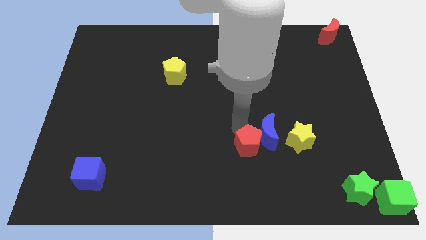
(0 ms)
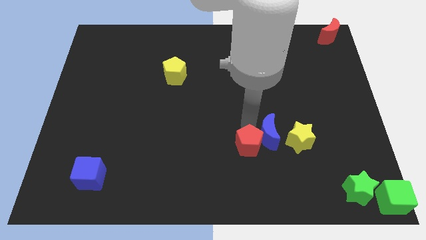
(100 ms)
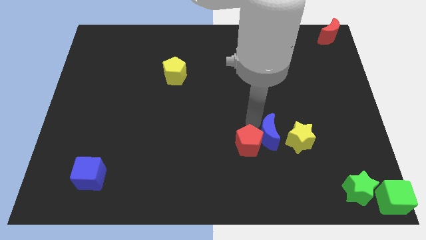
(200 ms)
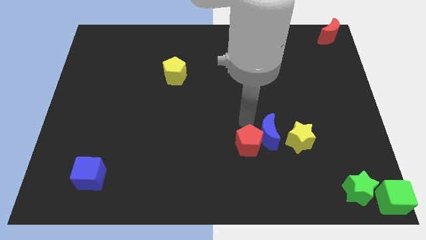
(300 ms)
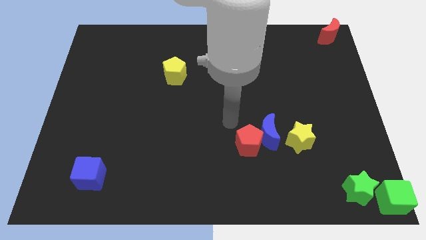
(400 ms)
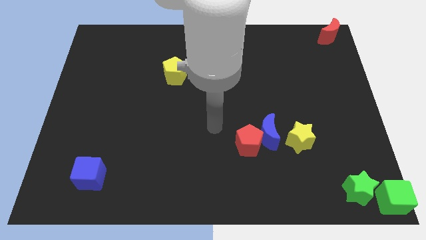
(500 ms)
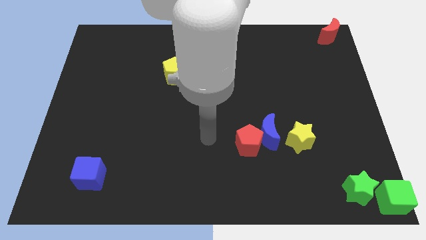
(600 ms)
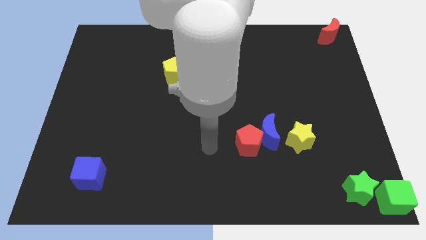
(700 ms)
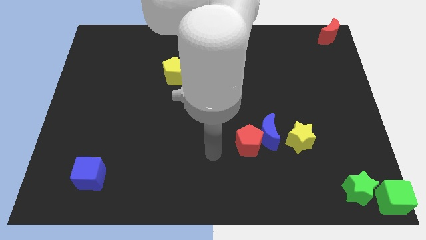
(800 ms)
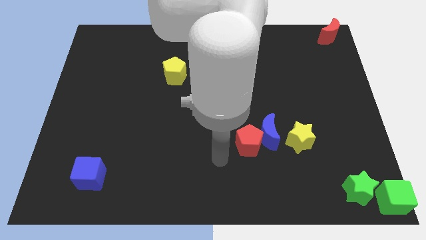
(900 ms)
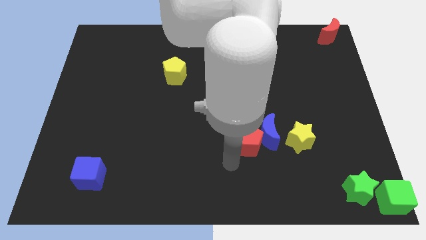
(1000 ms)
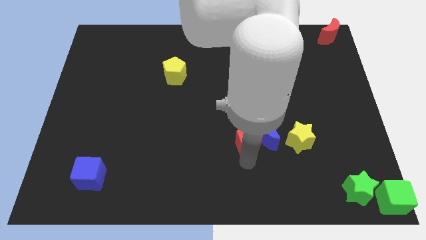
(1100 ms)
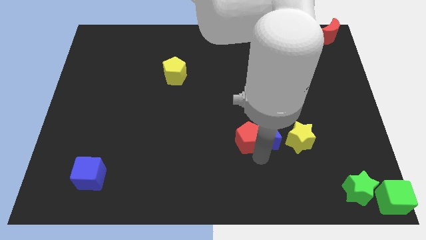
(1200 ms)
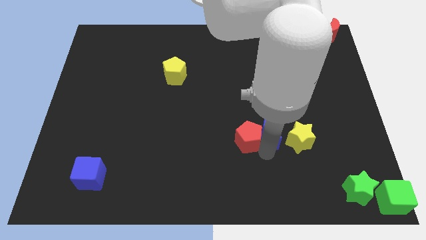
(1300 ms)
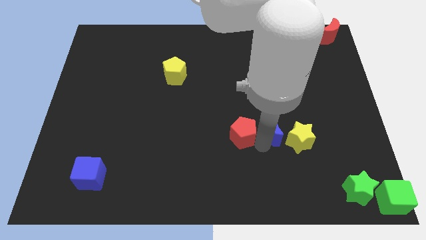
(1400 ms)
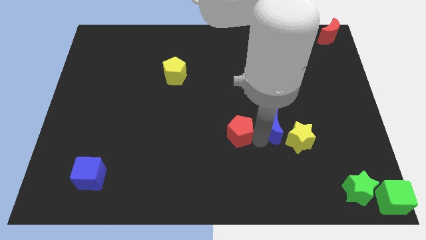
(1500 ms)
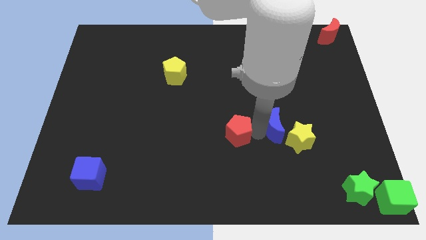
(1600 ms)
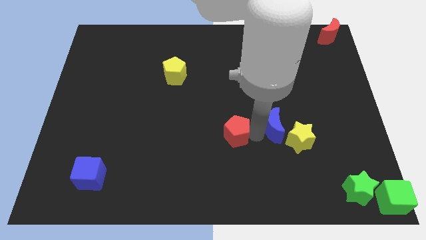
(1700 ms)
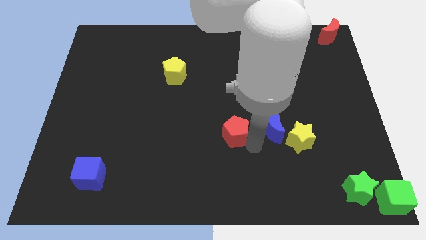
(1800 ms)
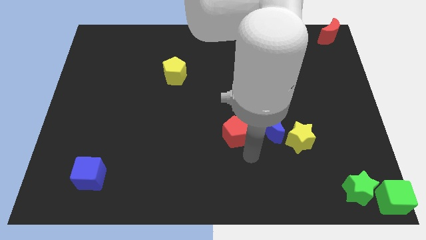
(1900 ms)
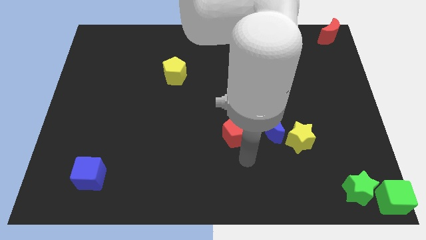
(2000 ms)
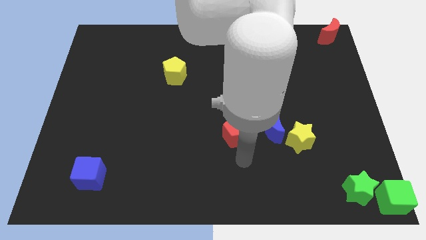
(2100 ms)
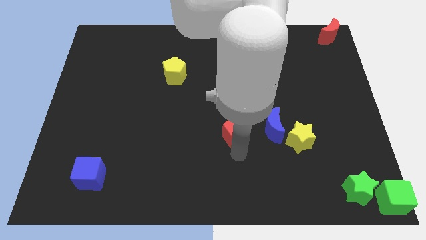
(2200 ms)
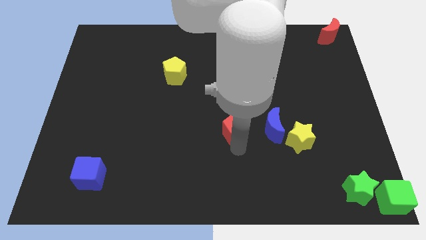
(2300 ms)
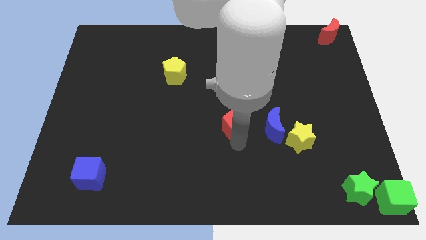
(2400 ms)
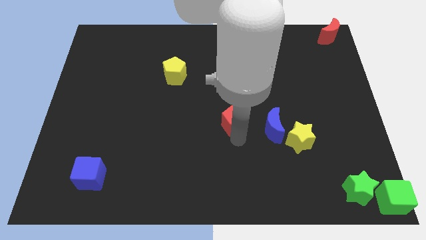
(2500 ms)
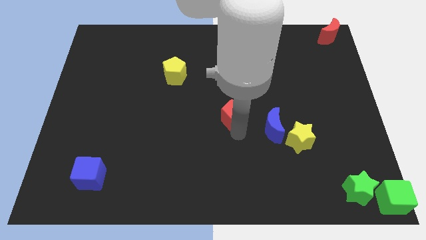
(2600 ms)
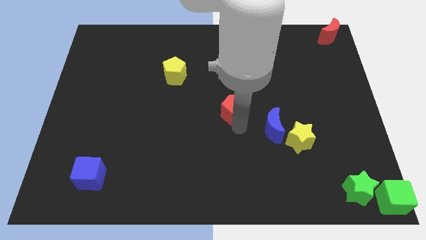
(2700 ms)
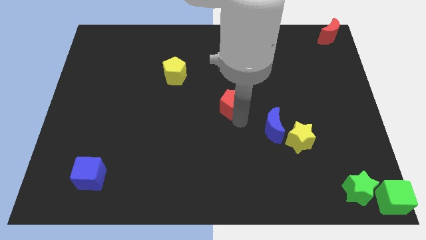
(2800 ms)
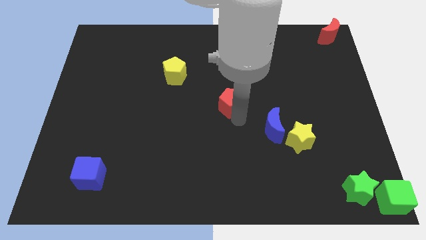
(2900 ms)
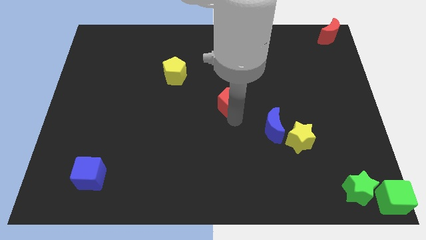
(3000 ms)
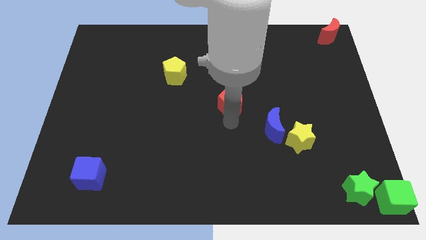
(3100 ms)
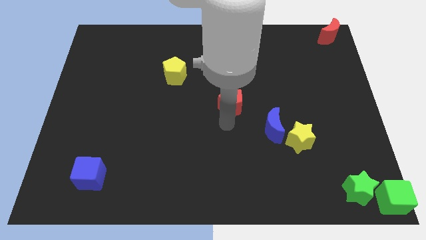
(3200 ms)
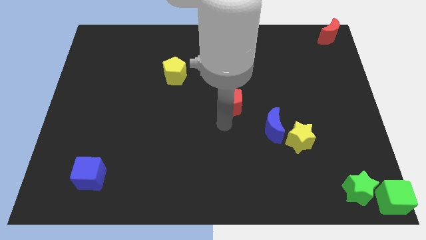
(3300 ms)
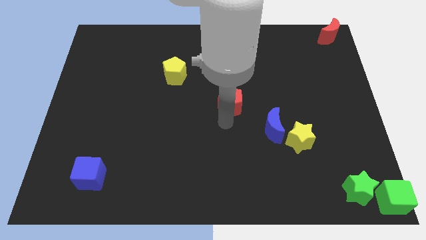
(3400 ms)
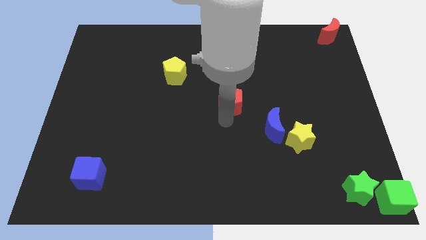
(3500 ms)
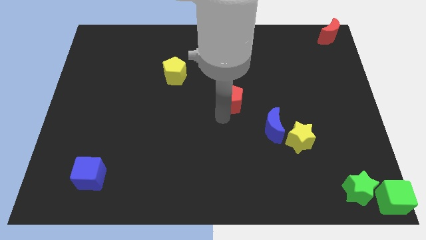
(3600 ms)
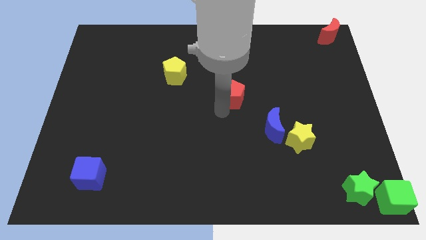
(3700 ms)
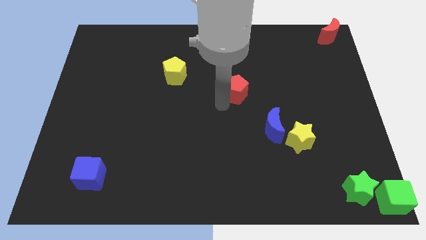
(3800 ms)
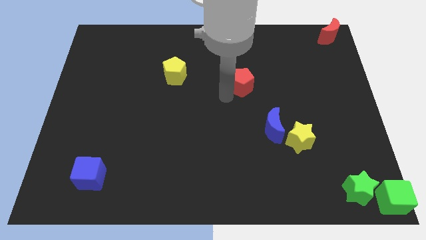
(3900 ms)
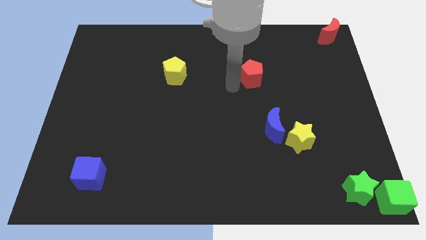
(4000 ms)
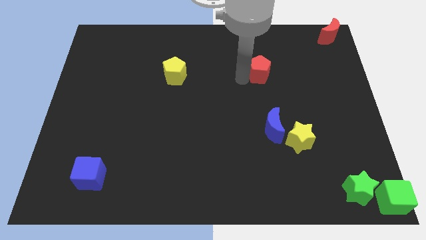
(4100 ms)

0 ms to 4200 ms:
place red pentagon adjacent to yellow pentagon

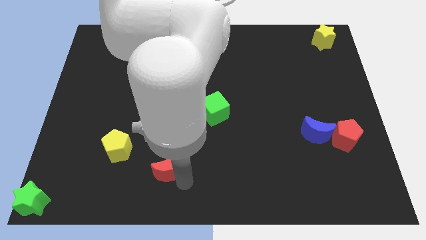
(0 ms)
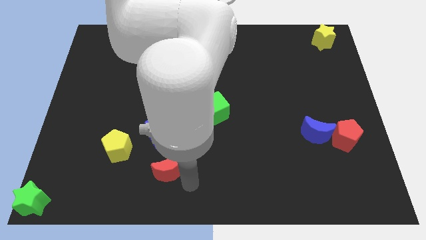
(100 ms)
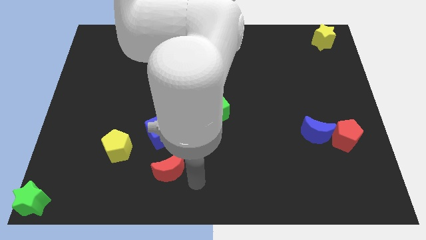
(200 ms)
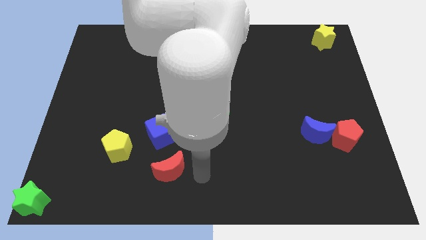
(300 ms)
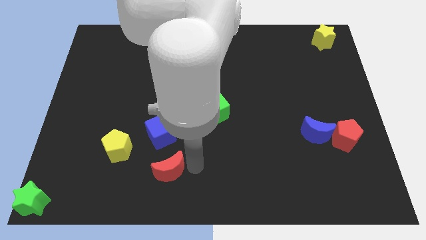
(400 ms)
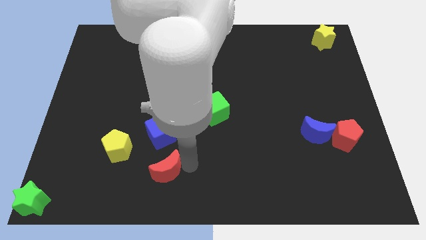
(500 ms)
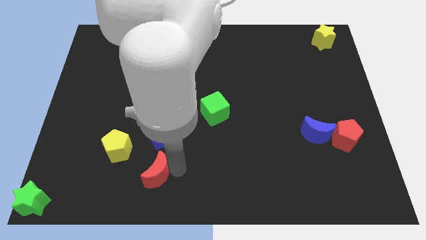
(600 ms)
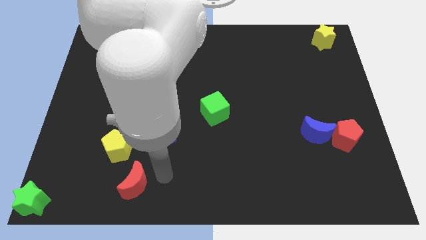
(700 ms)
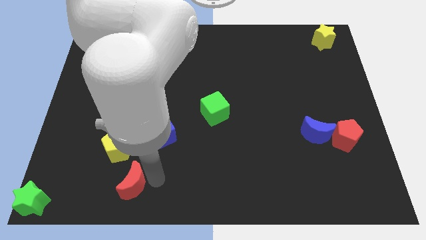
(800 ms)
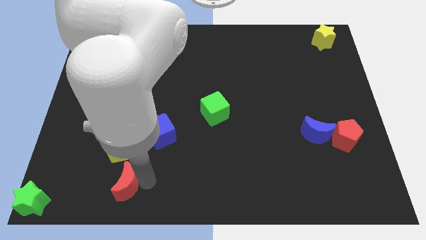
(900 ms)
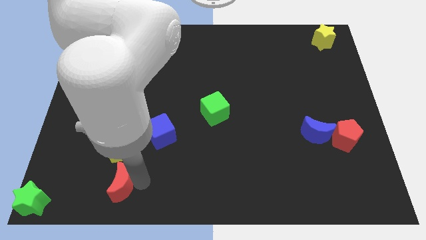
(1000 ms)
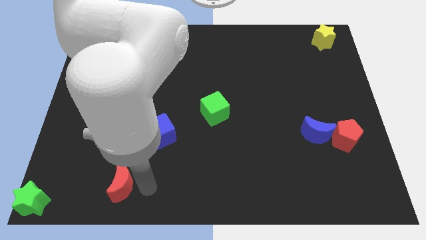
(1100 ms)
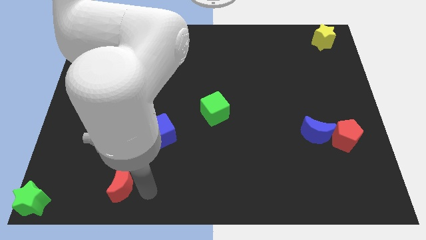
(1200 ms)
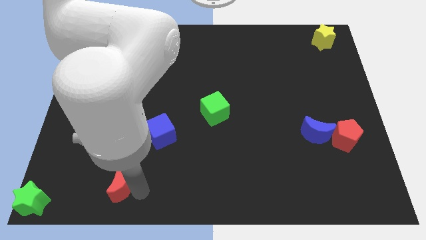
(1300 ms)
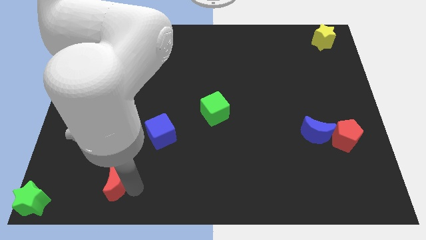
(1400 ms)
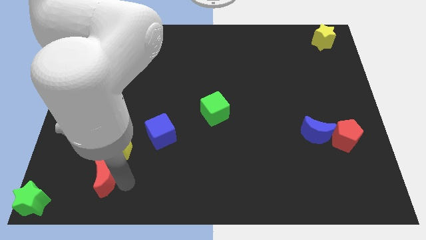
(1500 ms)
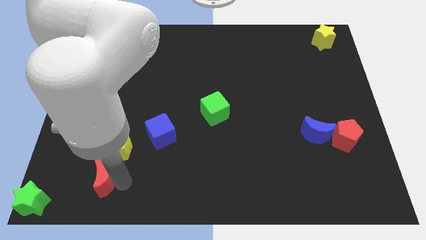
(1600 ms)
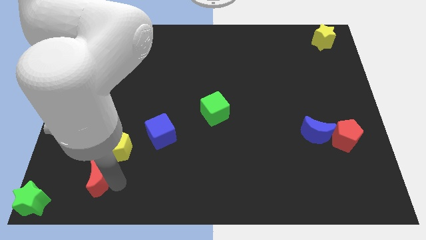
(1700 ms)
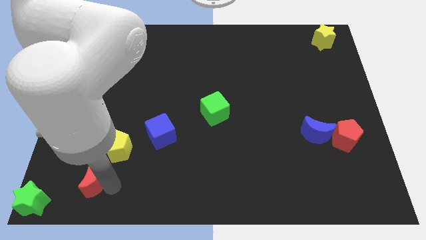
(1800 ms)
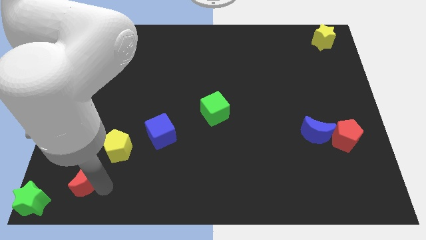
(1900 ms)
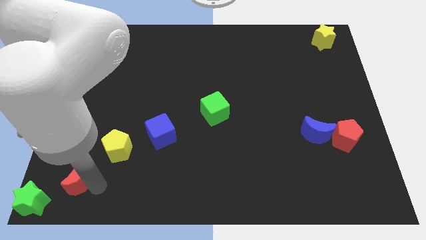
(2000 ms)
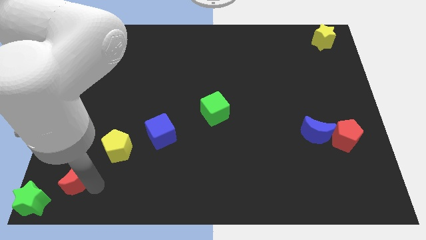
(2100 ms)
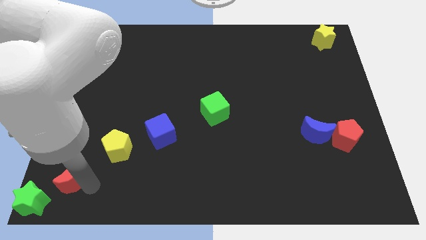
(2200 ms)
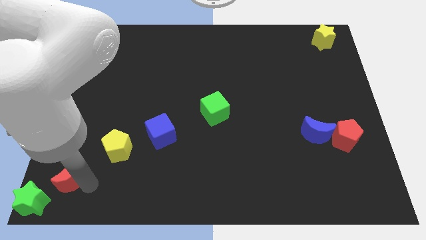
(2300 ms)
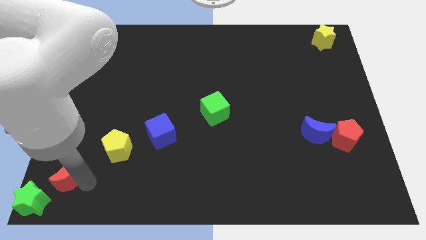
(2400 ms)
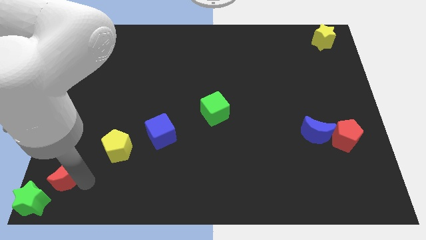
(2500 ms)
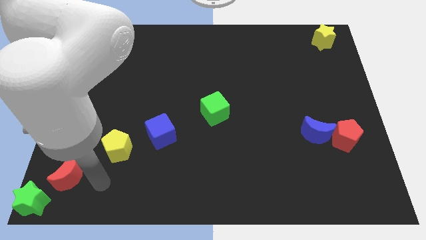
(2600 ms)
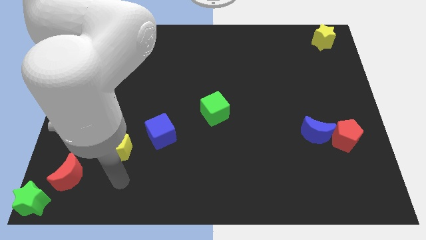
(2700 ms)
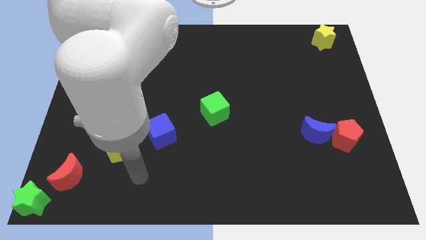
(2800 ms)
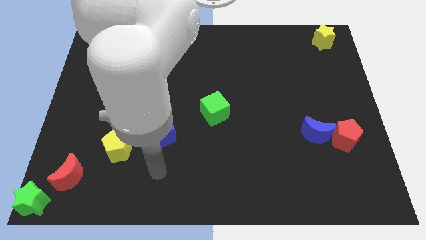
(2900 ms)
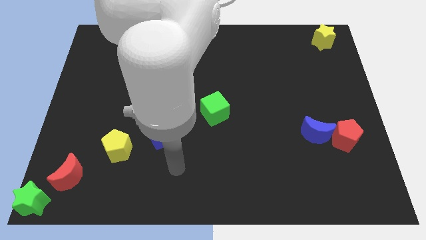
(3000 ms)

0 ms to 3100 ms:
push red moon in between green star and yellow pentagon

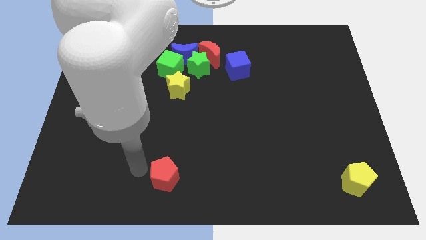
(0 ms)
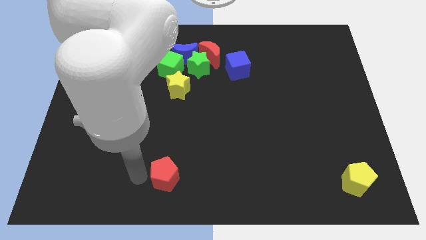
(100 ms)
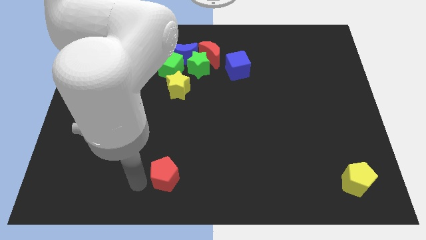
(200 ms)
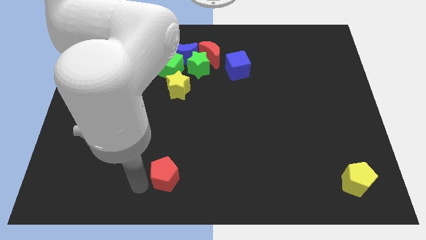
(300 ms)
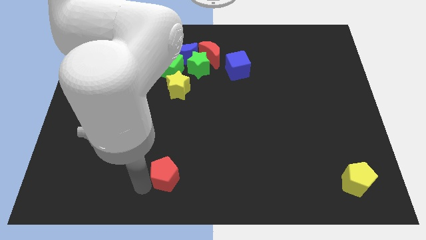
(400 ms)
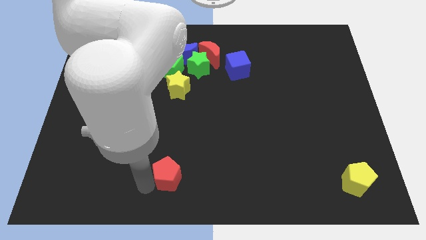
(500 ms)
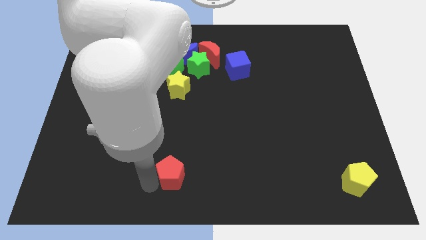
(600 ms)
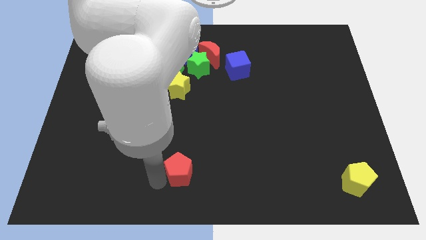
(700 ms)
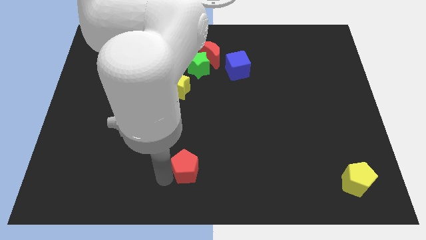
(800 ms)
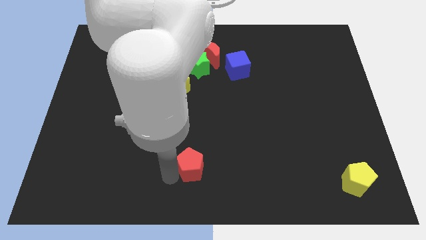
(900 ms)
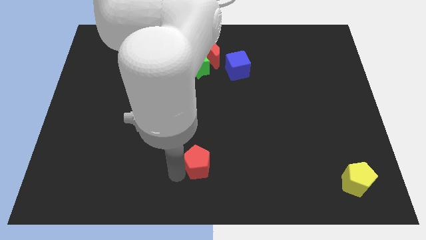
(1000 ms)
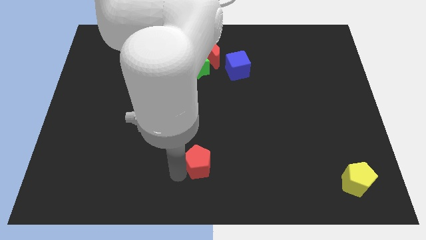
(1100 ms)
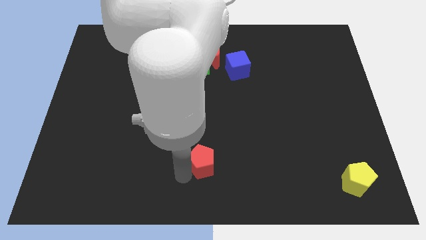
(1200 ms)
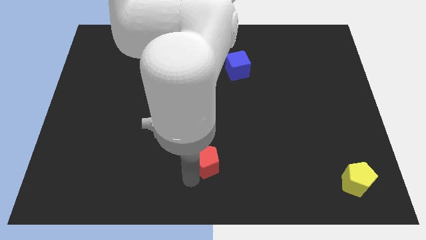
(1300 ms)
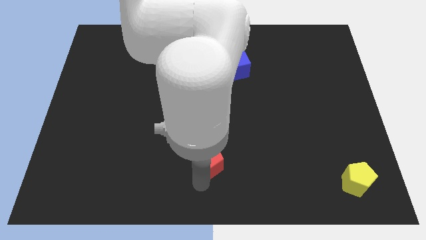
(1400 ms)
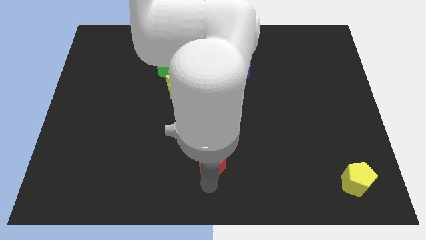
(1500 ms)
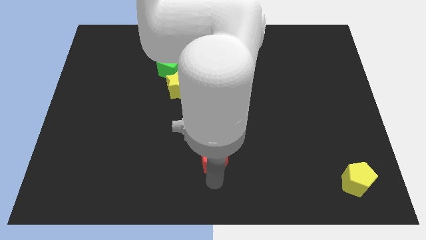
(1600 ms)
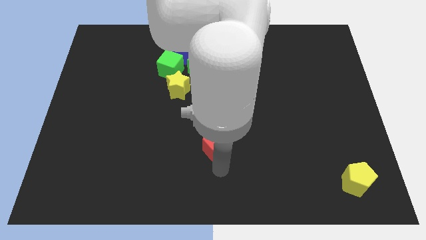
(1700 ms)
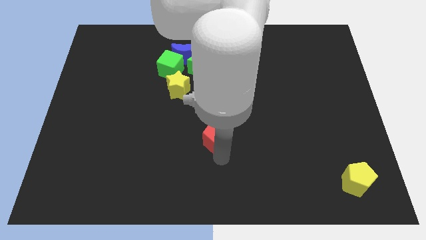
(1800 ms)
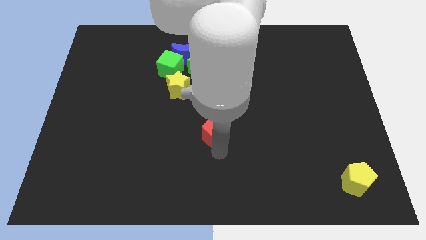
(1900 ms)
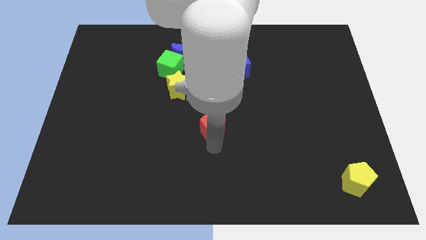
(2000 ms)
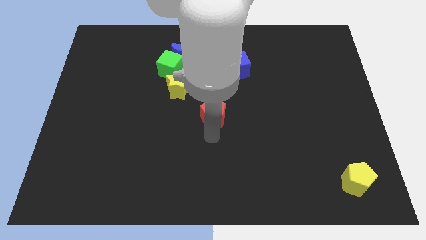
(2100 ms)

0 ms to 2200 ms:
push red pentagon towards the group of objects
